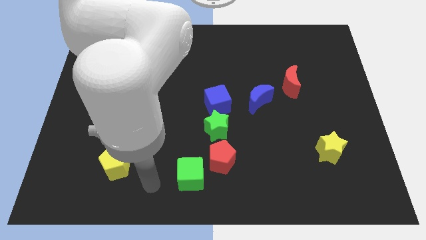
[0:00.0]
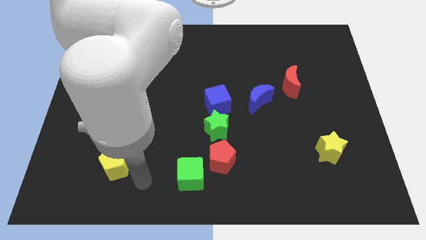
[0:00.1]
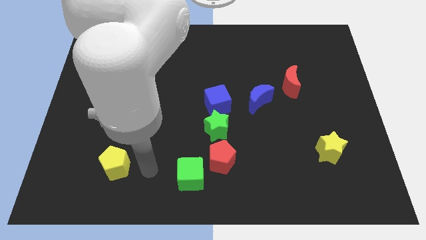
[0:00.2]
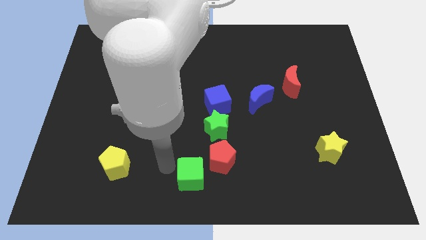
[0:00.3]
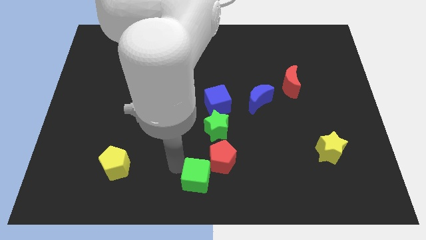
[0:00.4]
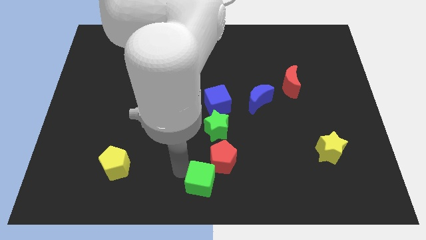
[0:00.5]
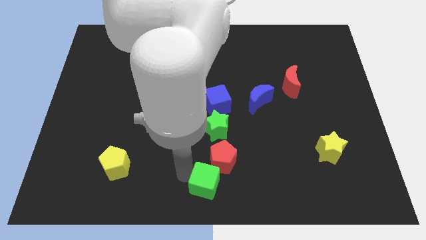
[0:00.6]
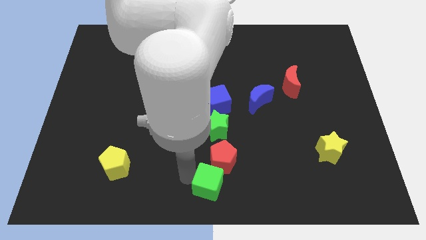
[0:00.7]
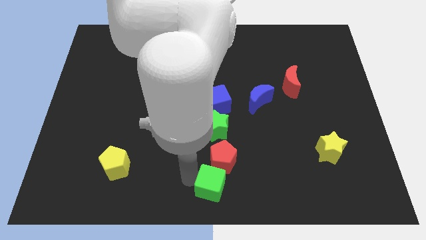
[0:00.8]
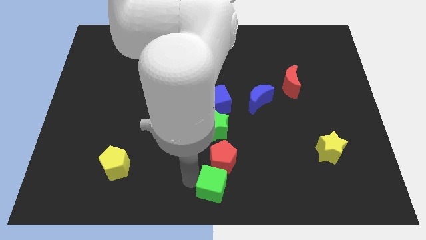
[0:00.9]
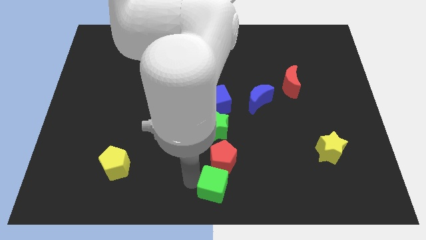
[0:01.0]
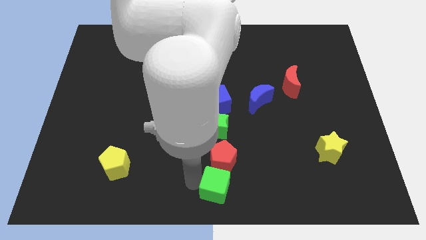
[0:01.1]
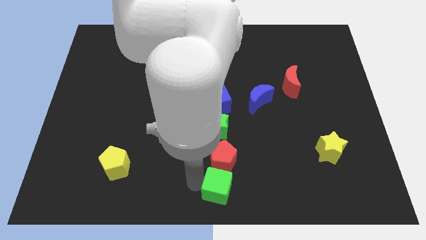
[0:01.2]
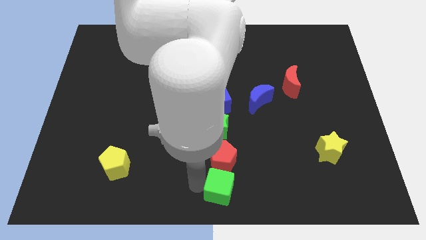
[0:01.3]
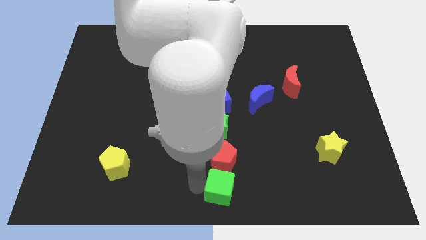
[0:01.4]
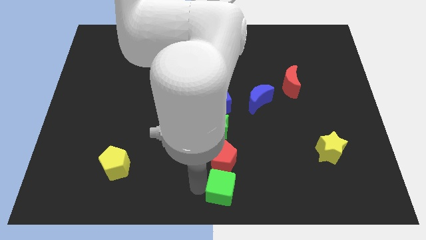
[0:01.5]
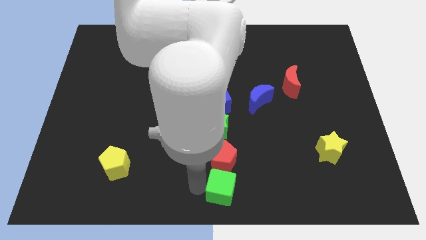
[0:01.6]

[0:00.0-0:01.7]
put green cube at the bottom of red pentagon

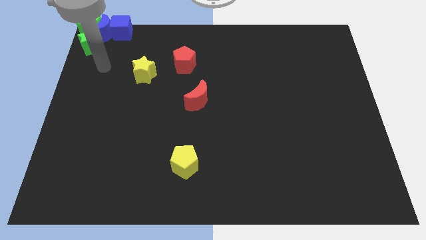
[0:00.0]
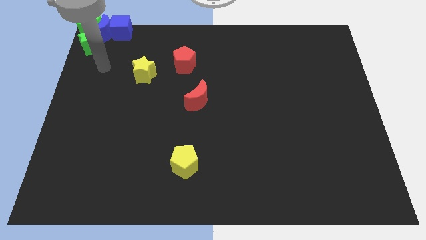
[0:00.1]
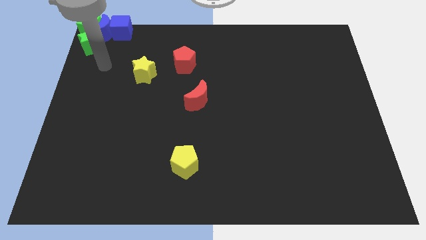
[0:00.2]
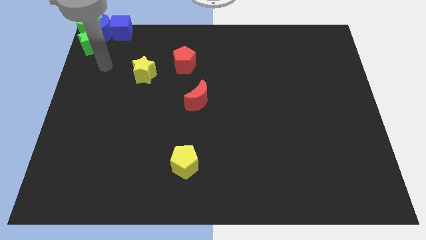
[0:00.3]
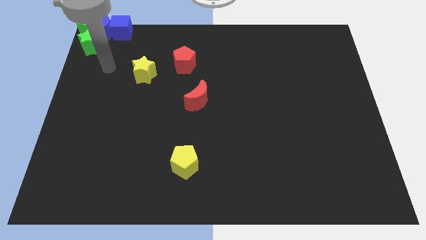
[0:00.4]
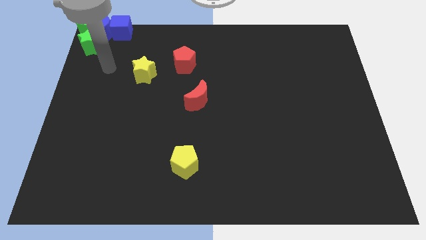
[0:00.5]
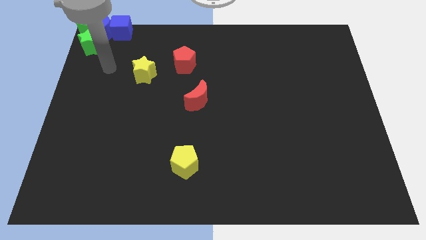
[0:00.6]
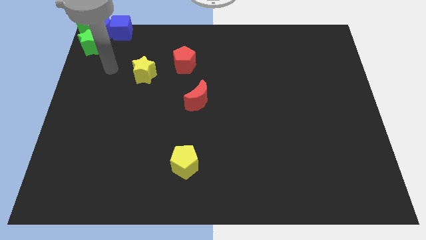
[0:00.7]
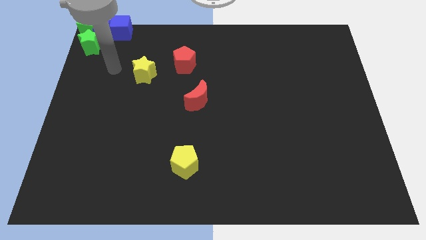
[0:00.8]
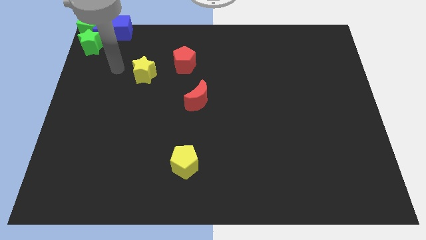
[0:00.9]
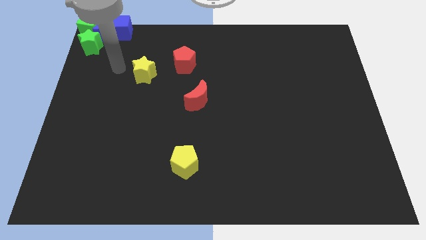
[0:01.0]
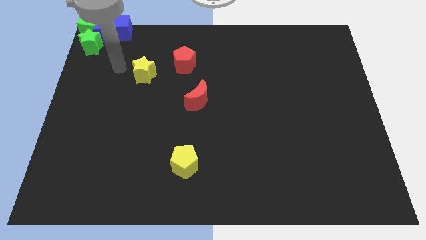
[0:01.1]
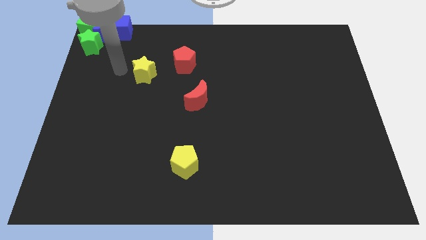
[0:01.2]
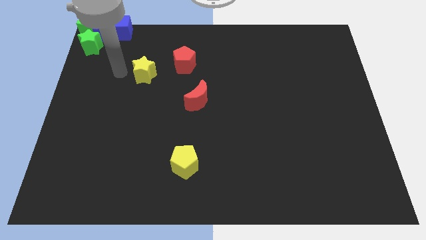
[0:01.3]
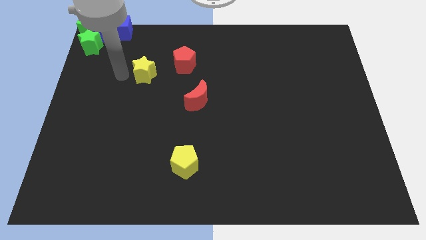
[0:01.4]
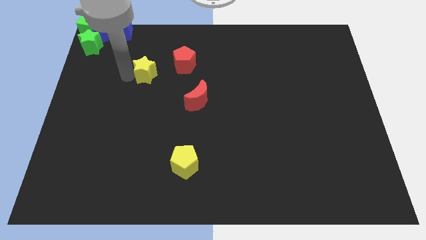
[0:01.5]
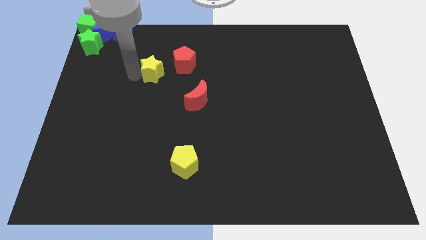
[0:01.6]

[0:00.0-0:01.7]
place your arm to the left of the yellow star

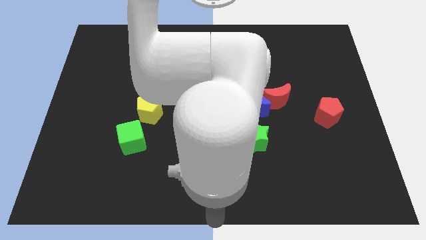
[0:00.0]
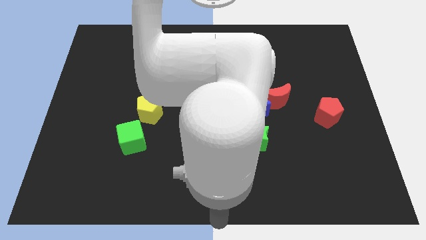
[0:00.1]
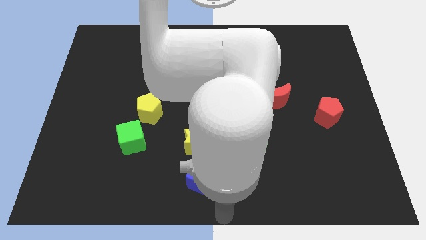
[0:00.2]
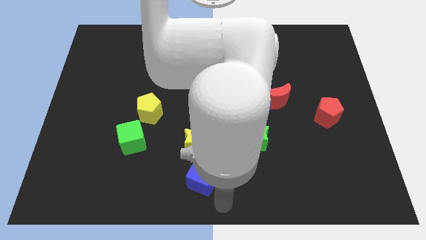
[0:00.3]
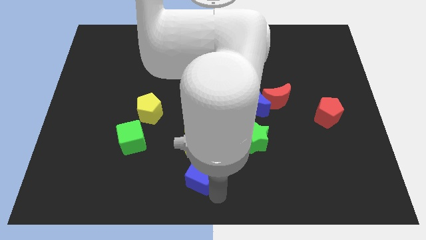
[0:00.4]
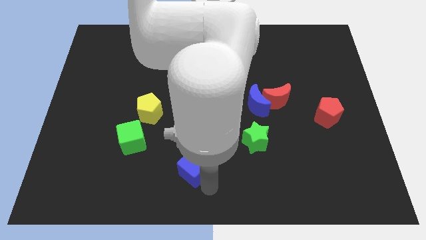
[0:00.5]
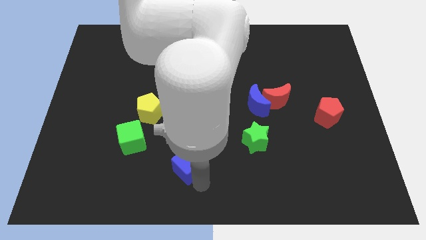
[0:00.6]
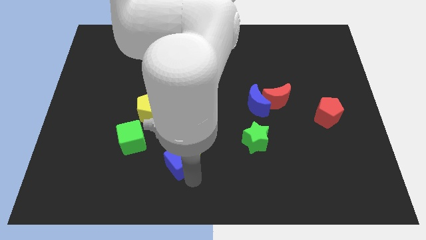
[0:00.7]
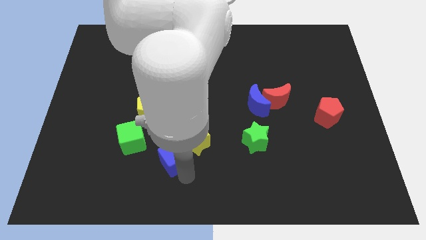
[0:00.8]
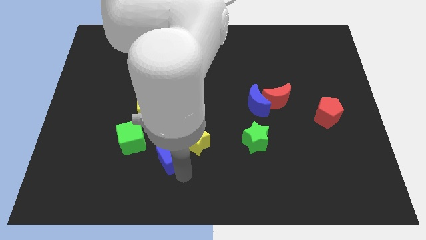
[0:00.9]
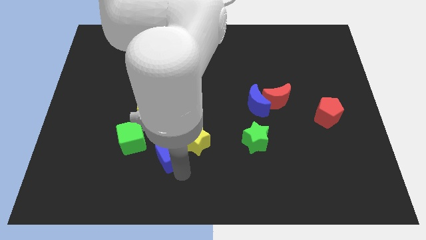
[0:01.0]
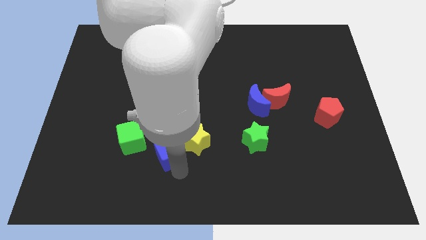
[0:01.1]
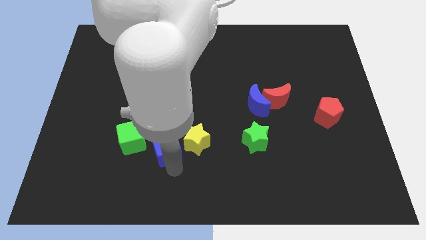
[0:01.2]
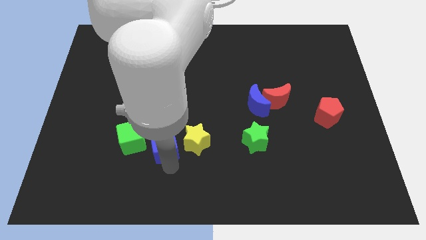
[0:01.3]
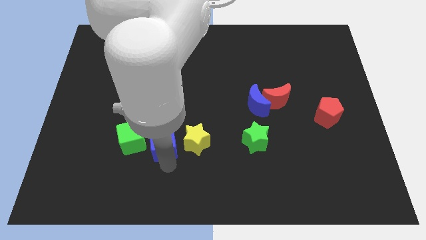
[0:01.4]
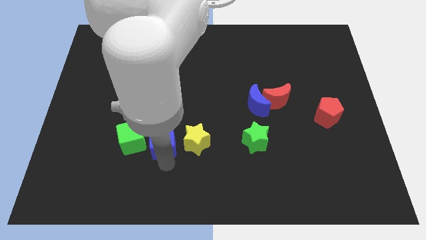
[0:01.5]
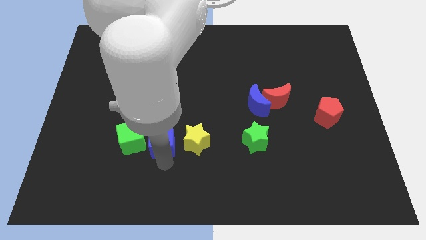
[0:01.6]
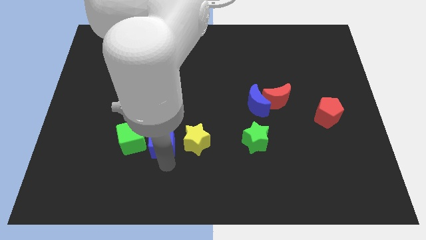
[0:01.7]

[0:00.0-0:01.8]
place the blue cube in between the green cube and yellow star

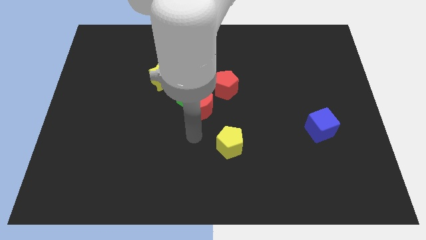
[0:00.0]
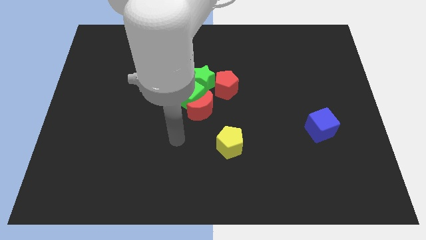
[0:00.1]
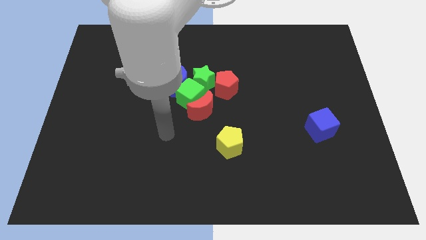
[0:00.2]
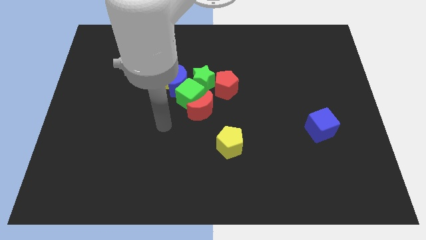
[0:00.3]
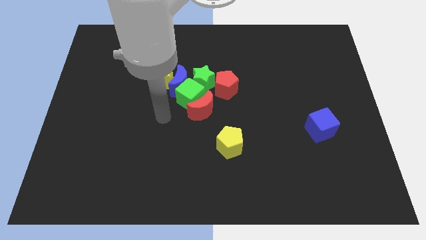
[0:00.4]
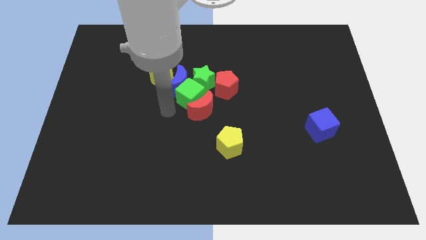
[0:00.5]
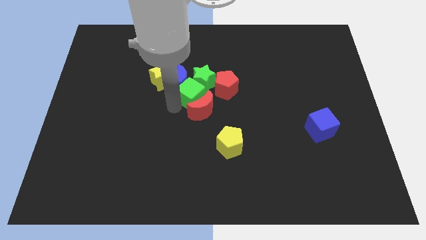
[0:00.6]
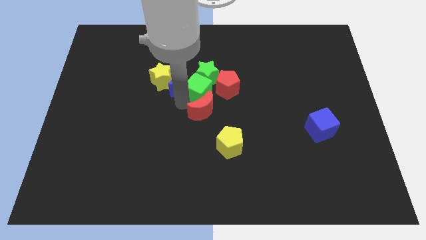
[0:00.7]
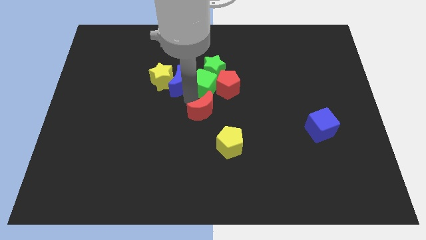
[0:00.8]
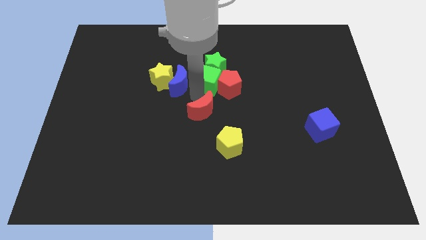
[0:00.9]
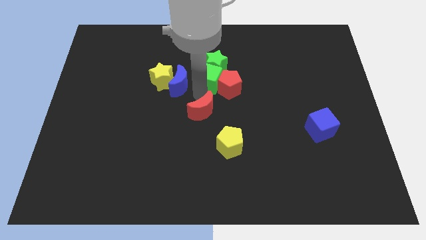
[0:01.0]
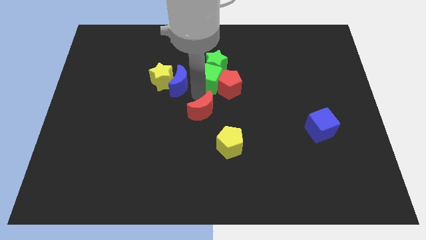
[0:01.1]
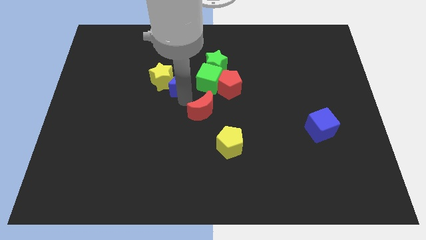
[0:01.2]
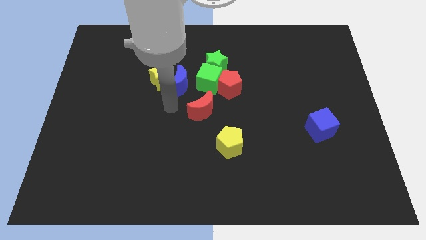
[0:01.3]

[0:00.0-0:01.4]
slide both the green blocks slightly to the top side of the board

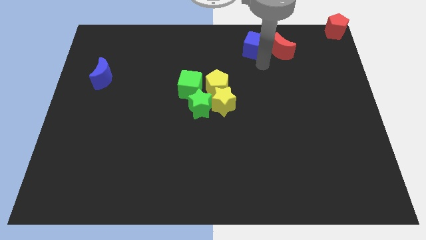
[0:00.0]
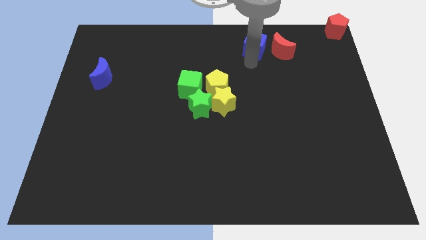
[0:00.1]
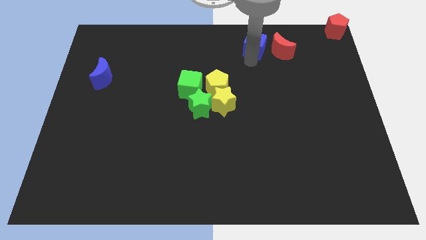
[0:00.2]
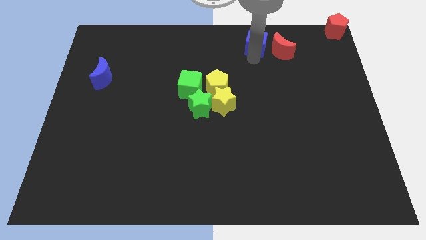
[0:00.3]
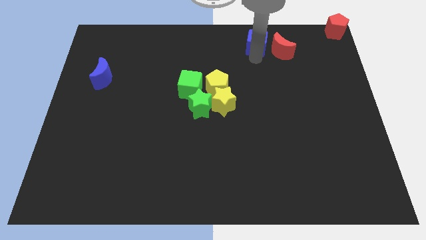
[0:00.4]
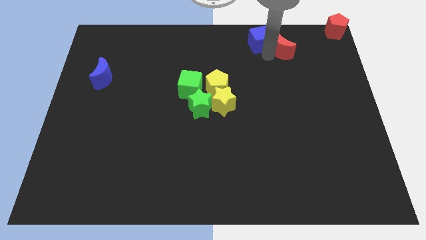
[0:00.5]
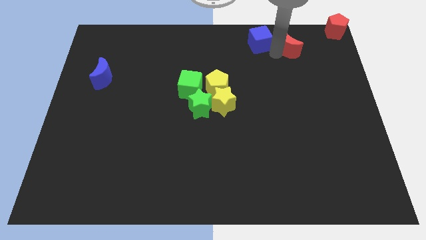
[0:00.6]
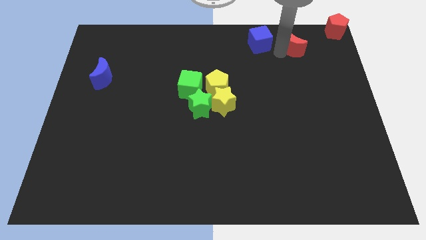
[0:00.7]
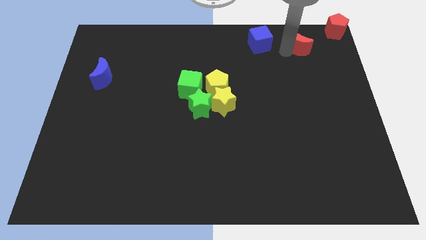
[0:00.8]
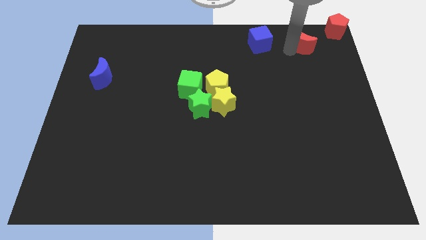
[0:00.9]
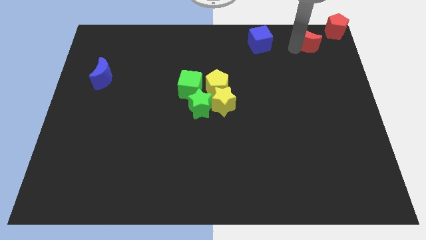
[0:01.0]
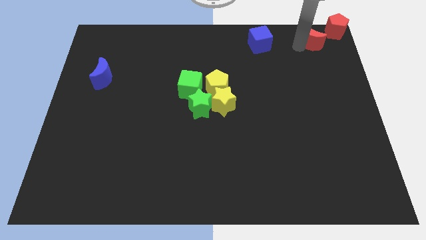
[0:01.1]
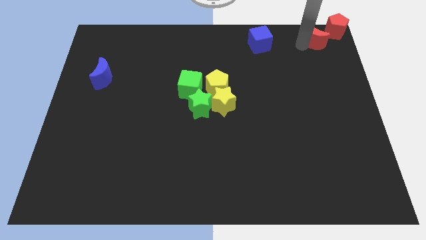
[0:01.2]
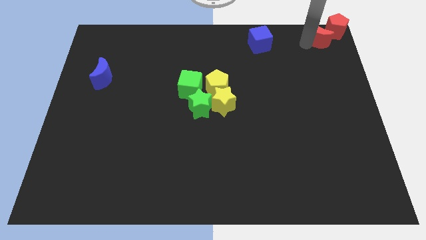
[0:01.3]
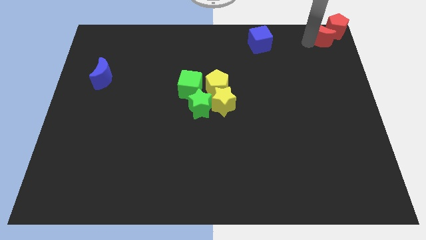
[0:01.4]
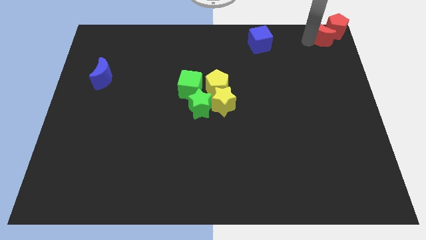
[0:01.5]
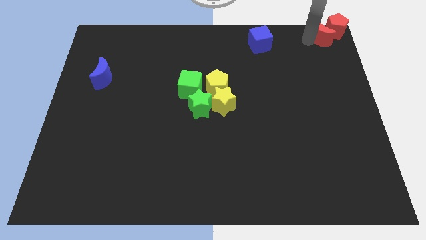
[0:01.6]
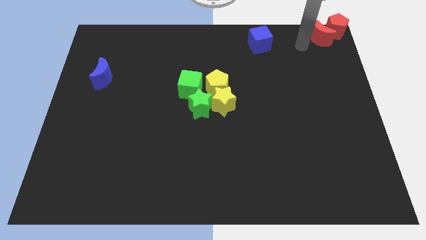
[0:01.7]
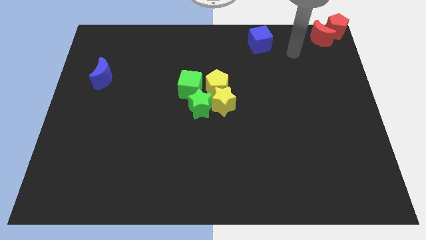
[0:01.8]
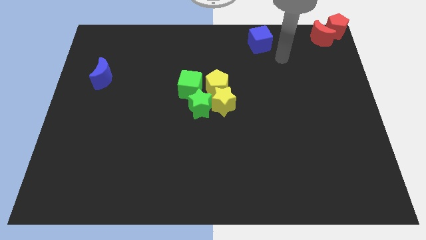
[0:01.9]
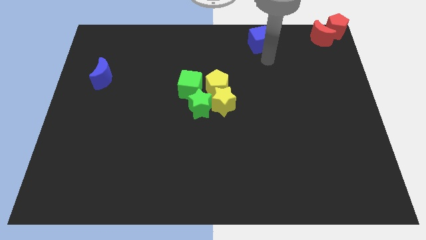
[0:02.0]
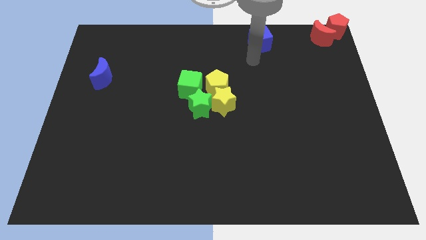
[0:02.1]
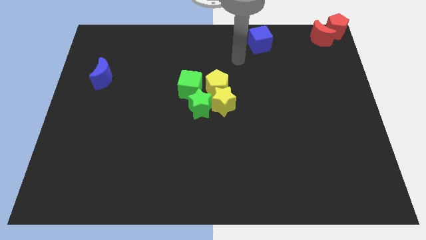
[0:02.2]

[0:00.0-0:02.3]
move the red crescent to the left side of the red pentagon
